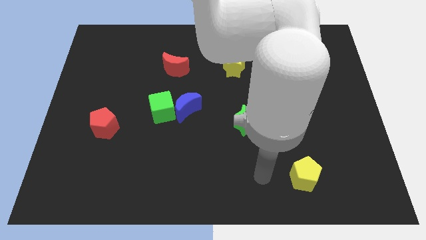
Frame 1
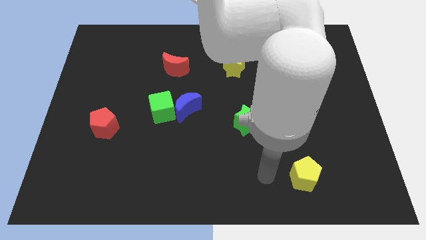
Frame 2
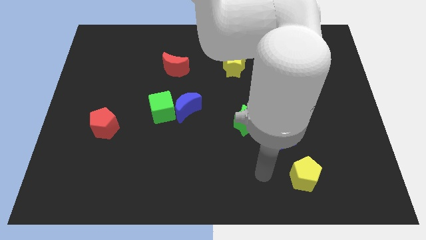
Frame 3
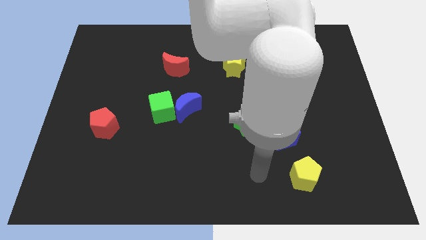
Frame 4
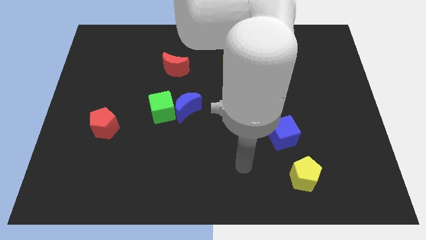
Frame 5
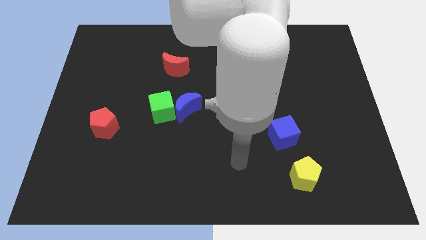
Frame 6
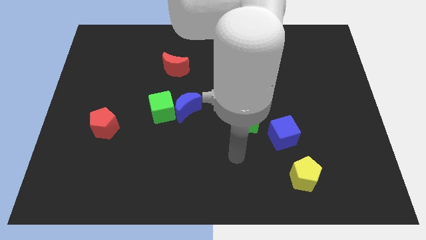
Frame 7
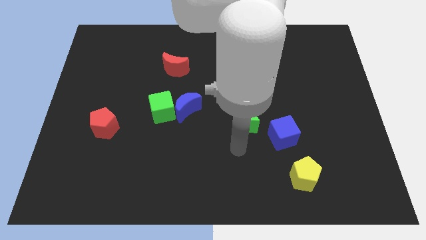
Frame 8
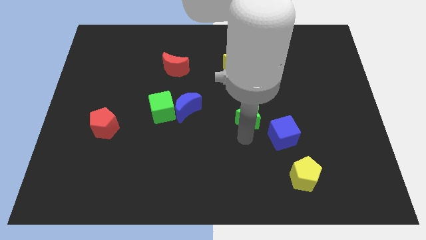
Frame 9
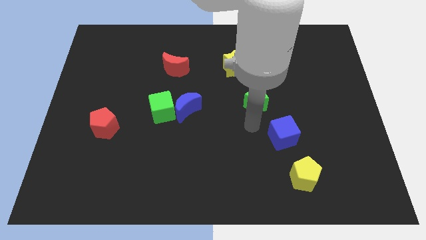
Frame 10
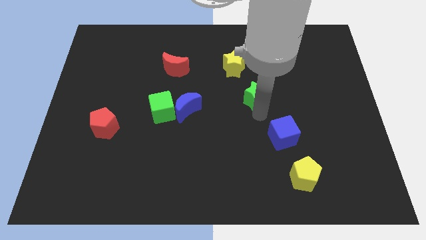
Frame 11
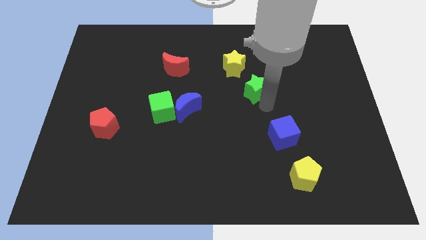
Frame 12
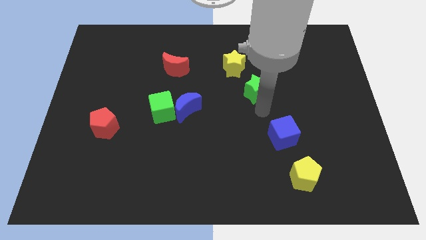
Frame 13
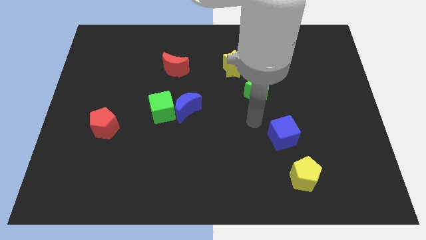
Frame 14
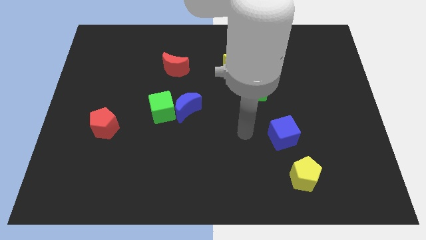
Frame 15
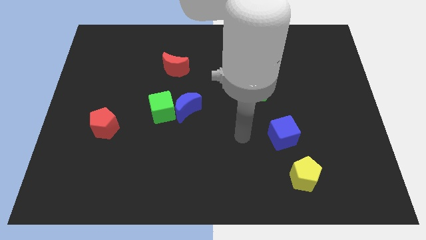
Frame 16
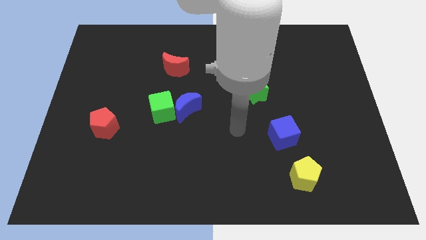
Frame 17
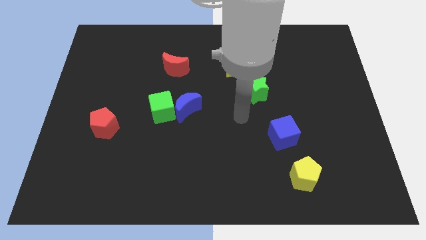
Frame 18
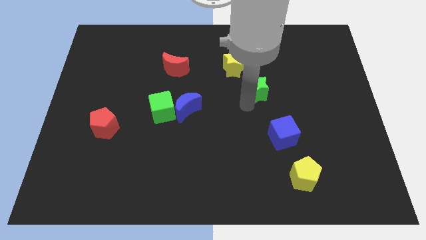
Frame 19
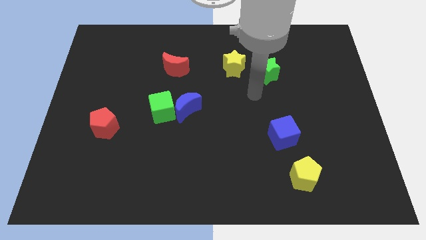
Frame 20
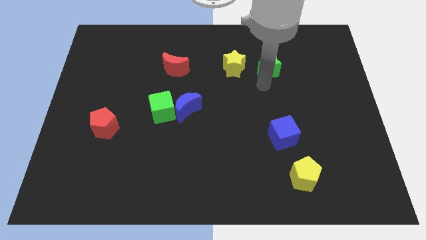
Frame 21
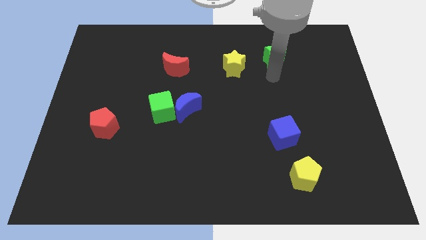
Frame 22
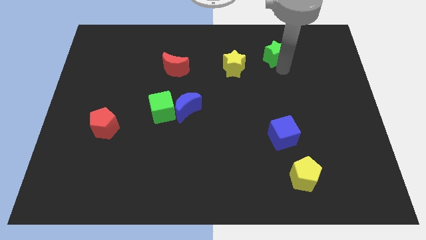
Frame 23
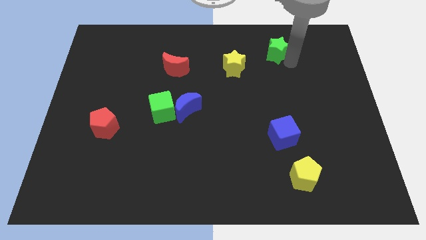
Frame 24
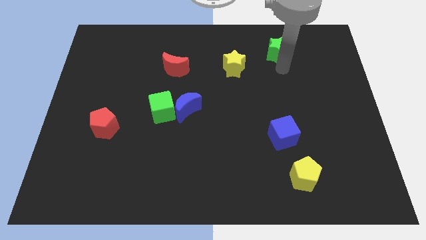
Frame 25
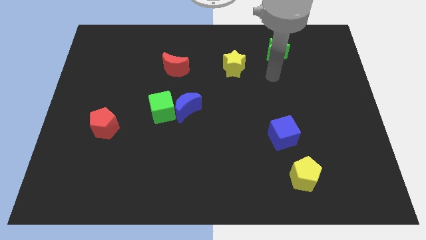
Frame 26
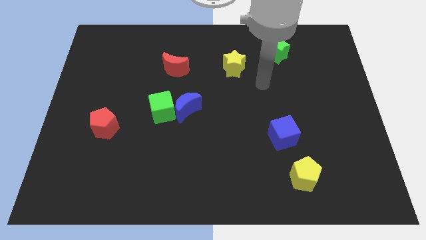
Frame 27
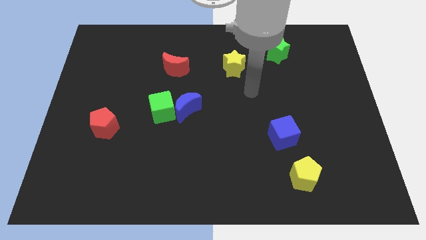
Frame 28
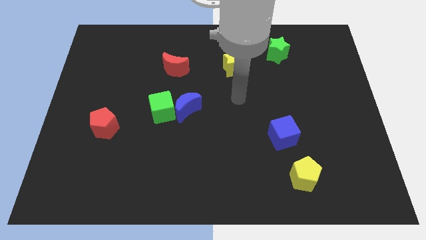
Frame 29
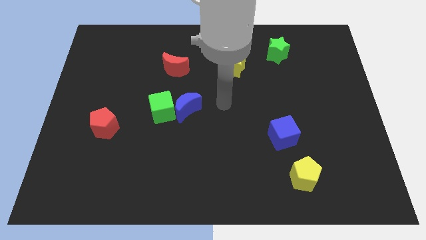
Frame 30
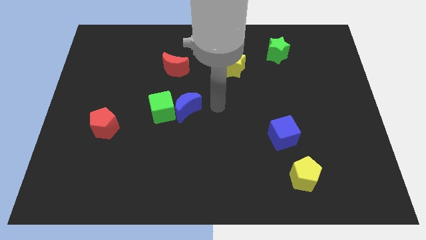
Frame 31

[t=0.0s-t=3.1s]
push the green star to the top side of the board

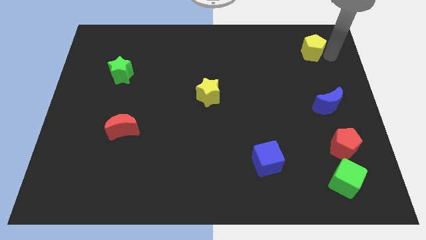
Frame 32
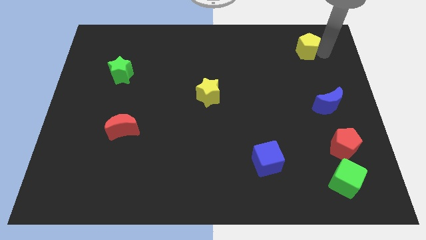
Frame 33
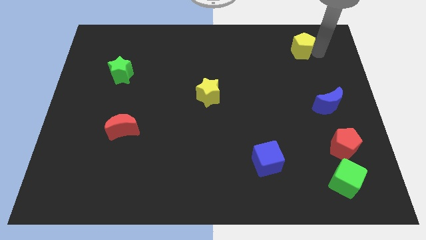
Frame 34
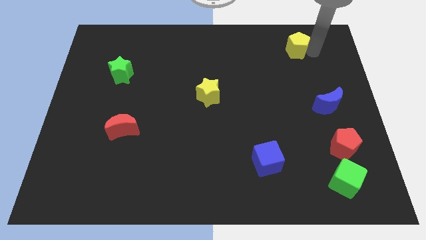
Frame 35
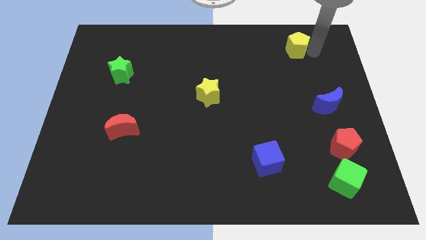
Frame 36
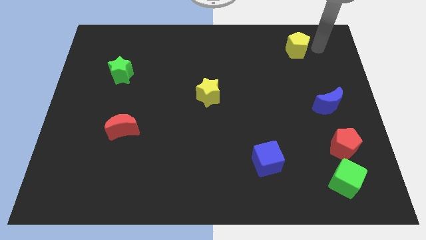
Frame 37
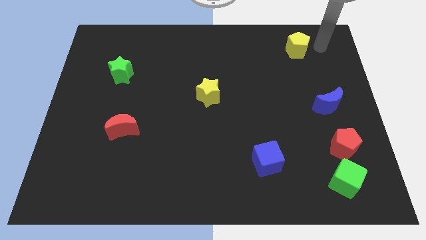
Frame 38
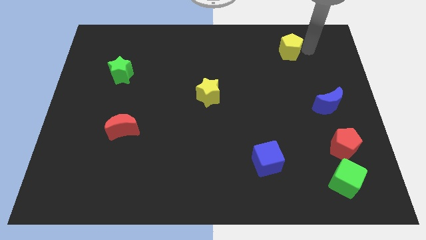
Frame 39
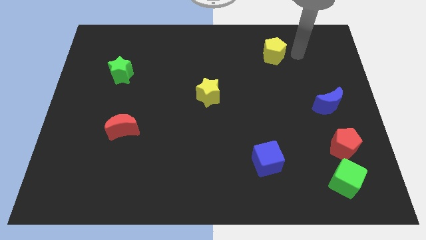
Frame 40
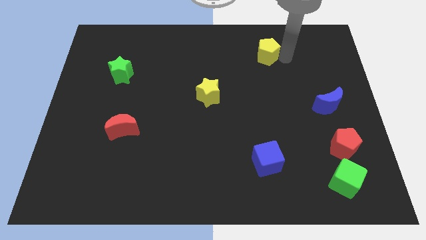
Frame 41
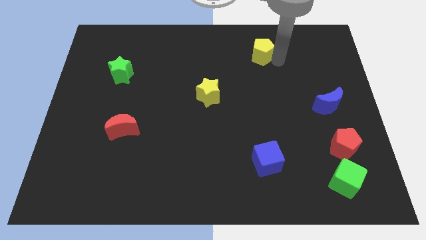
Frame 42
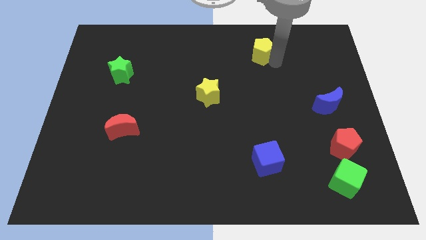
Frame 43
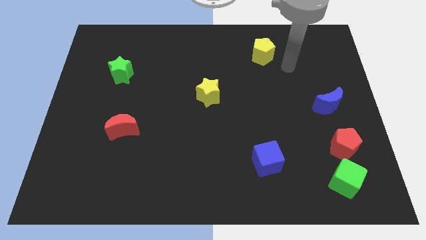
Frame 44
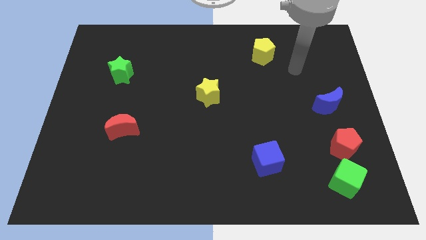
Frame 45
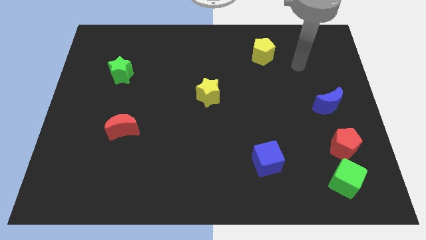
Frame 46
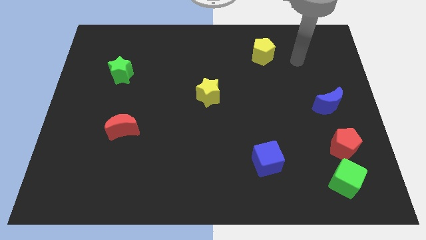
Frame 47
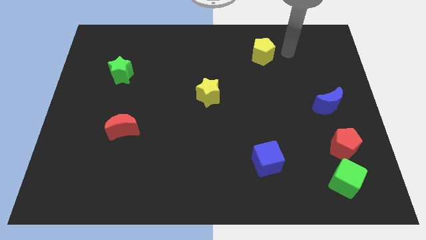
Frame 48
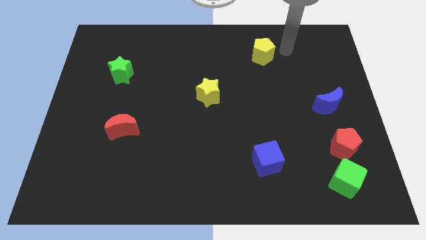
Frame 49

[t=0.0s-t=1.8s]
place the yellow pentagon above the blue cube

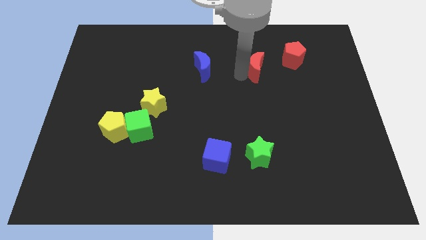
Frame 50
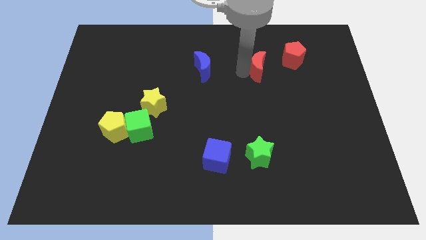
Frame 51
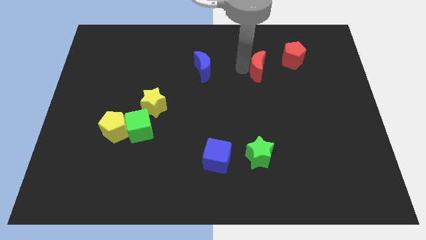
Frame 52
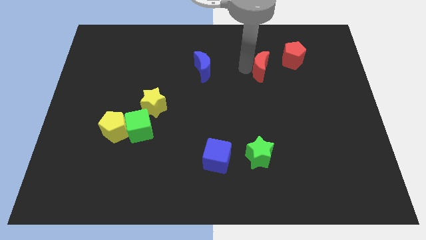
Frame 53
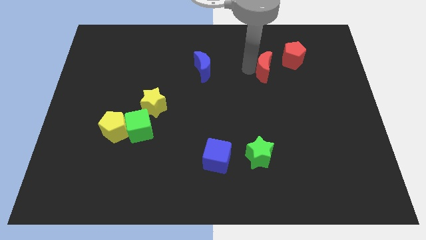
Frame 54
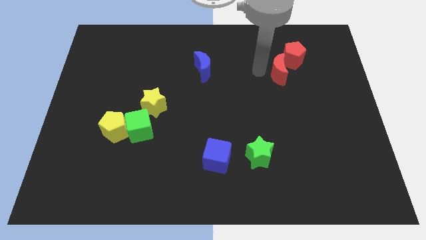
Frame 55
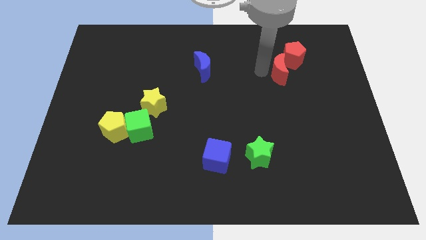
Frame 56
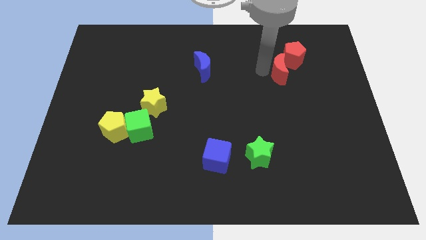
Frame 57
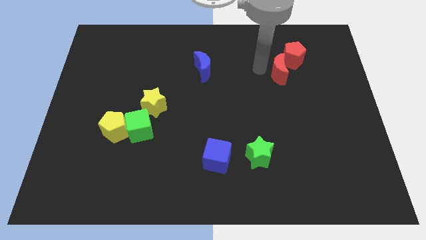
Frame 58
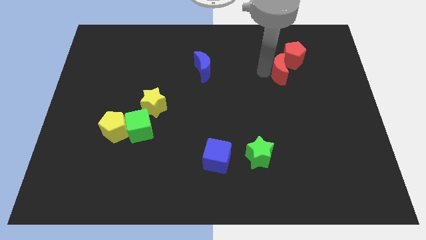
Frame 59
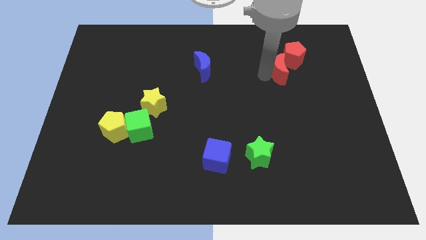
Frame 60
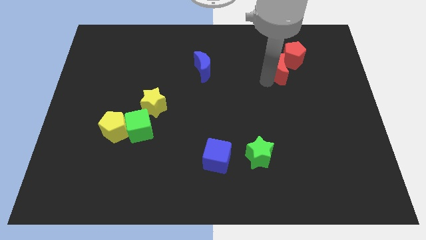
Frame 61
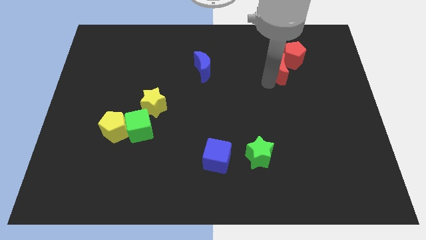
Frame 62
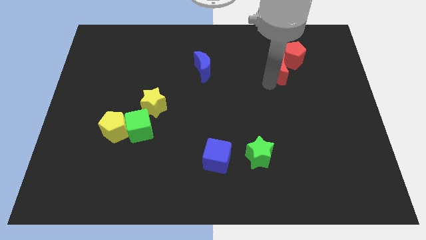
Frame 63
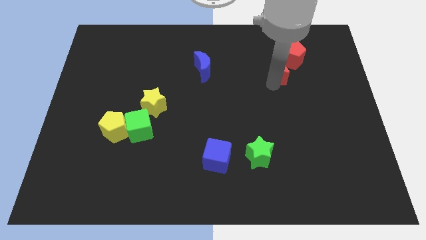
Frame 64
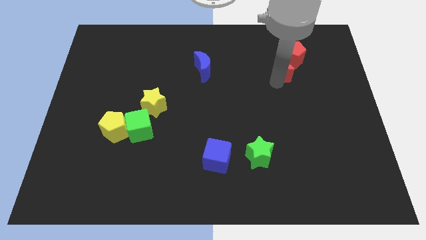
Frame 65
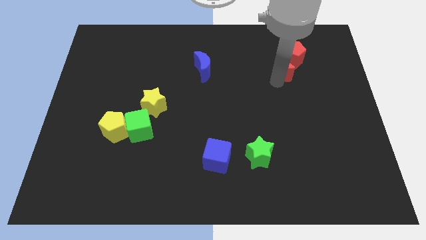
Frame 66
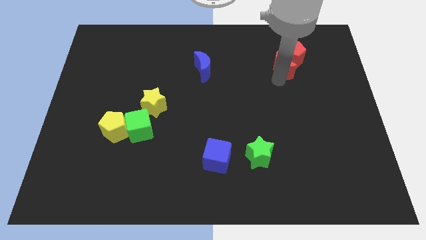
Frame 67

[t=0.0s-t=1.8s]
push red crescent into red pentagon

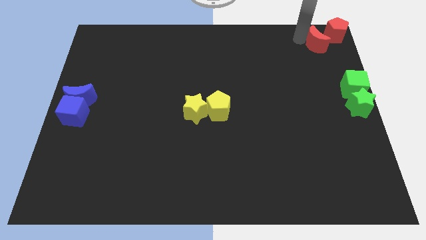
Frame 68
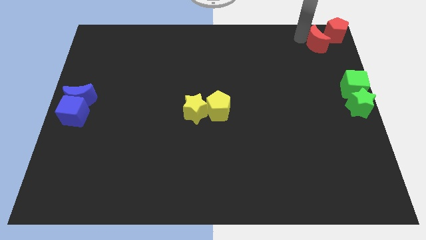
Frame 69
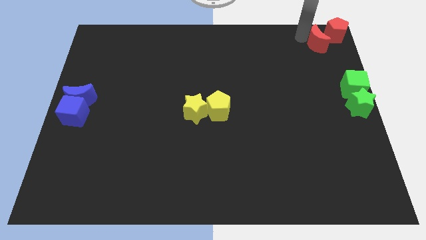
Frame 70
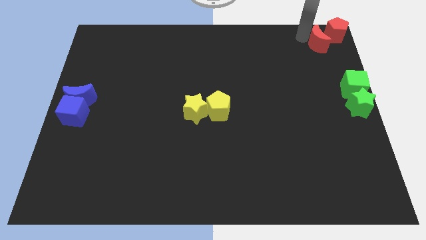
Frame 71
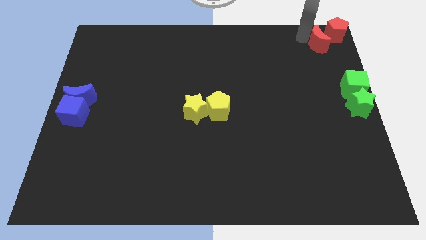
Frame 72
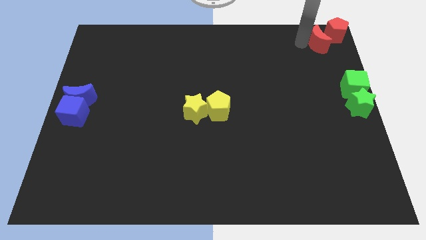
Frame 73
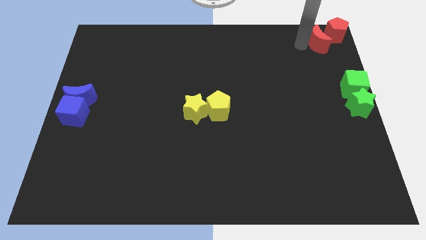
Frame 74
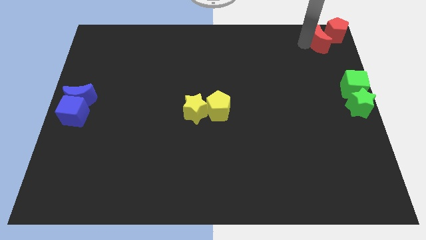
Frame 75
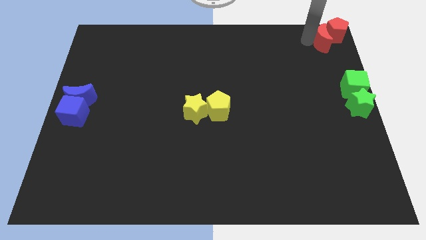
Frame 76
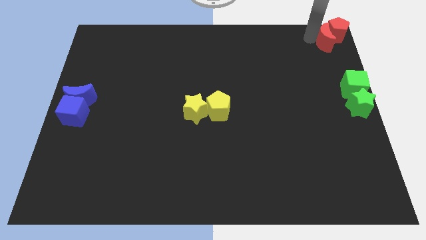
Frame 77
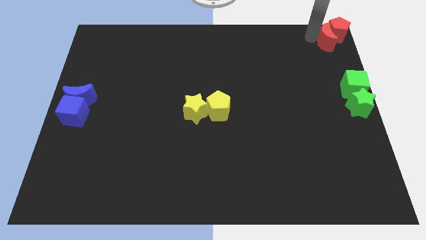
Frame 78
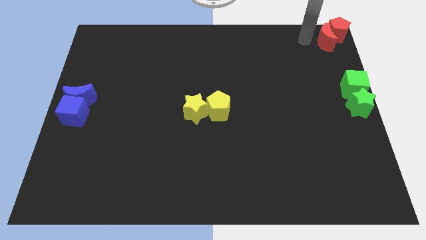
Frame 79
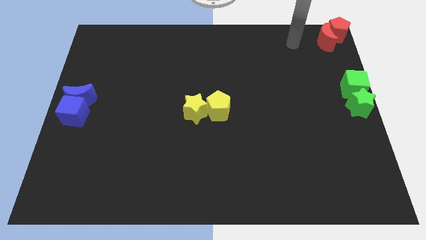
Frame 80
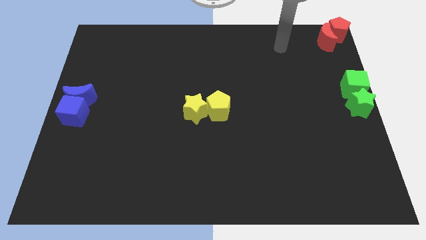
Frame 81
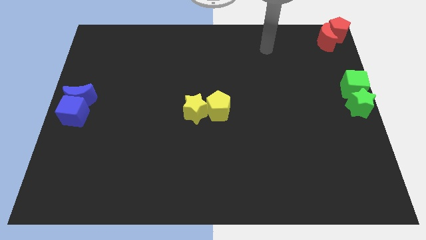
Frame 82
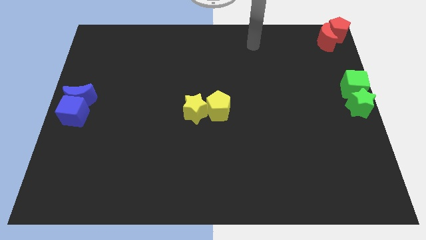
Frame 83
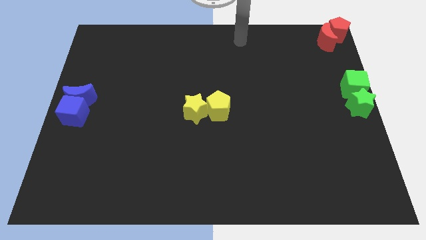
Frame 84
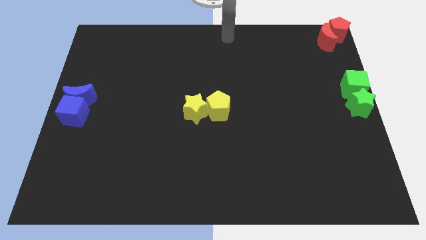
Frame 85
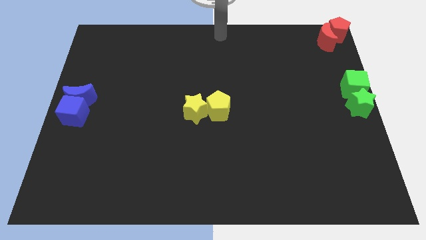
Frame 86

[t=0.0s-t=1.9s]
put the red moon into the red pentagon
